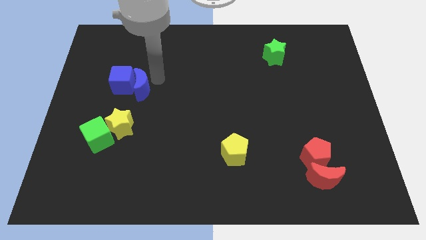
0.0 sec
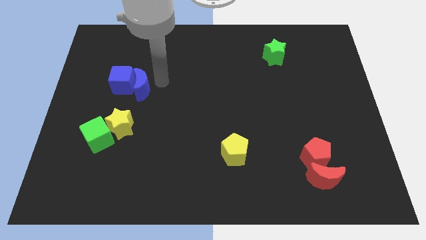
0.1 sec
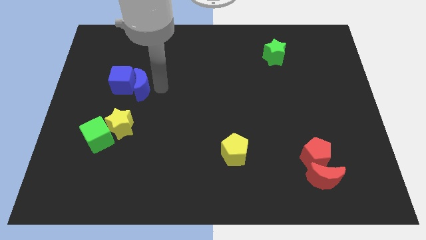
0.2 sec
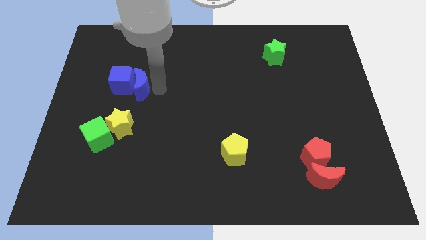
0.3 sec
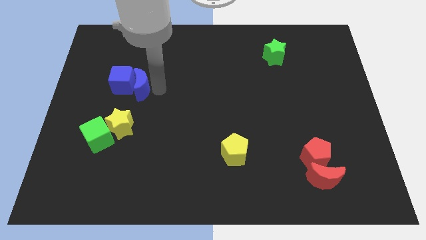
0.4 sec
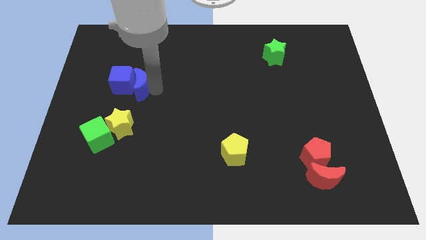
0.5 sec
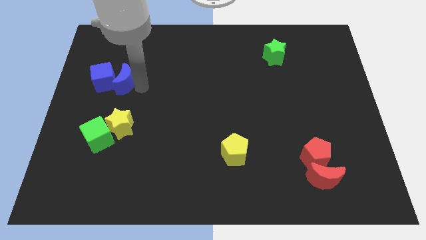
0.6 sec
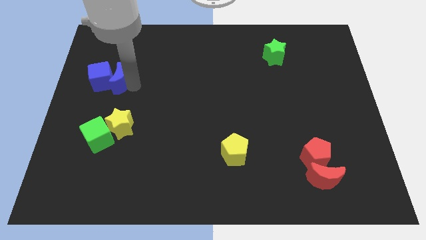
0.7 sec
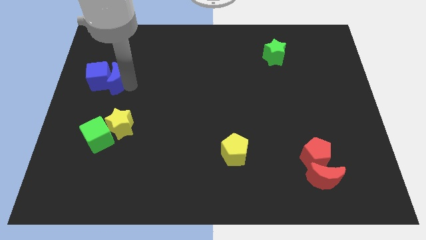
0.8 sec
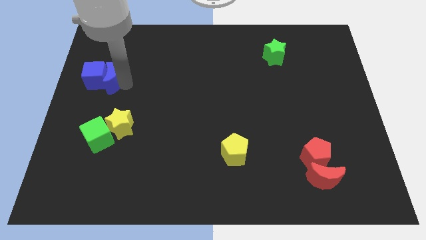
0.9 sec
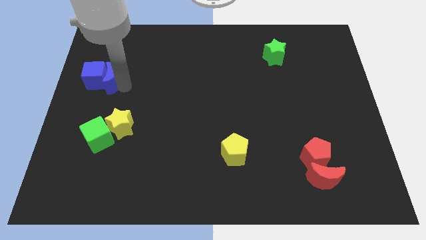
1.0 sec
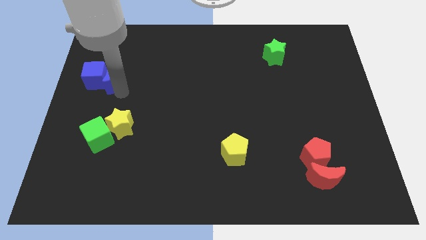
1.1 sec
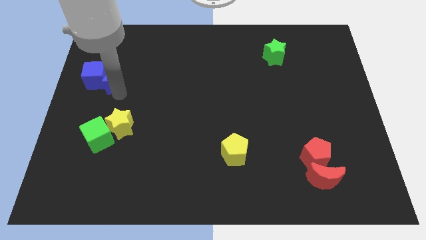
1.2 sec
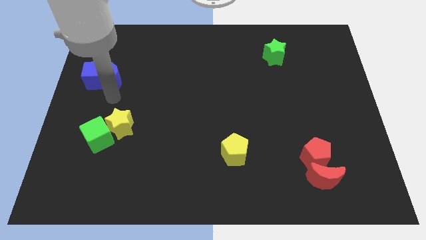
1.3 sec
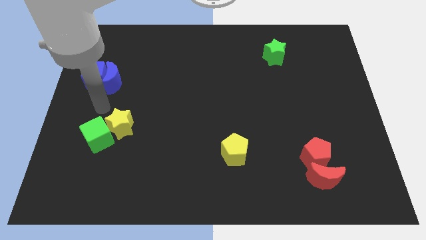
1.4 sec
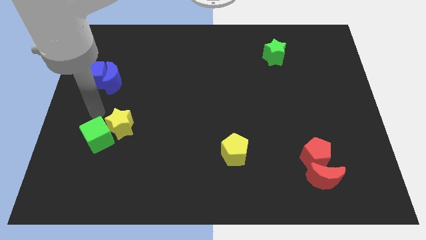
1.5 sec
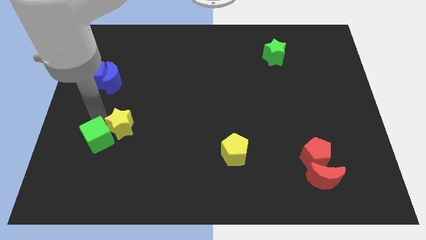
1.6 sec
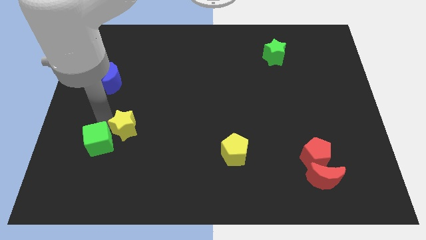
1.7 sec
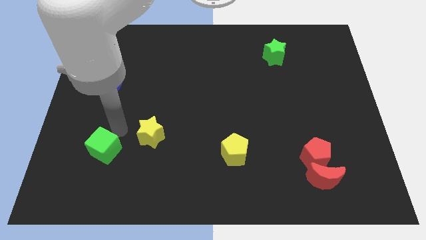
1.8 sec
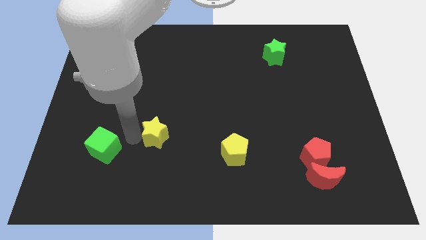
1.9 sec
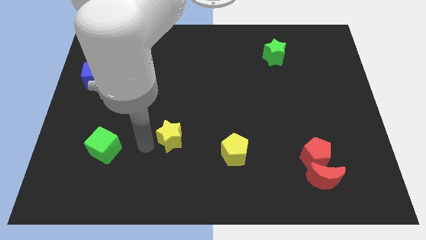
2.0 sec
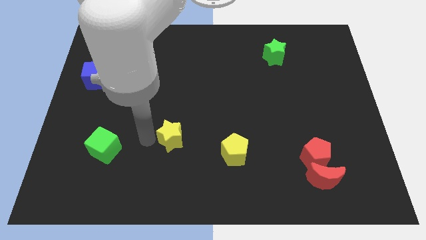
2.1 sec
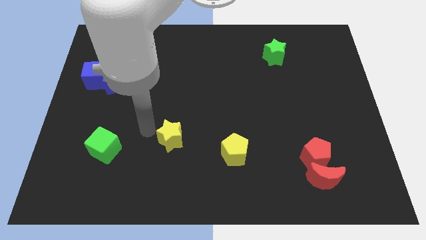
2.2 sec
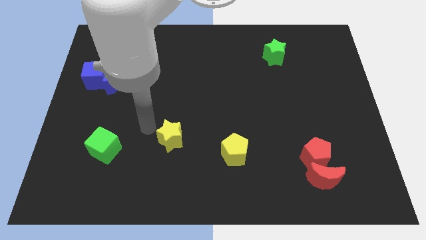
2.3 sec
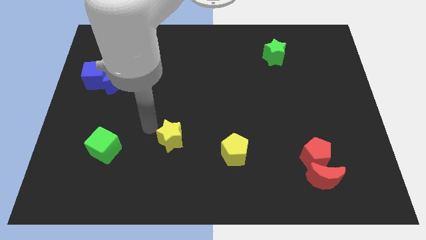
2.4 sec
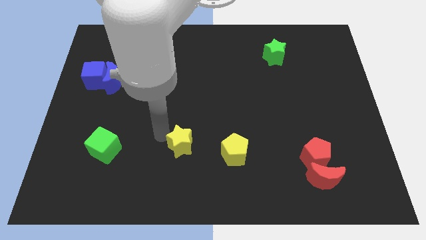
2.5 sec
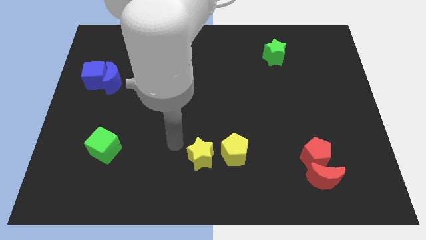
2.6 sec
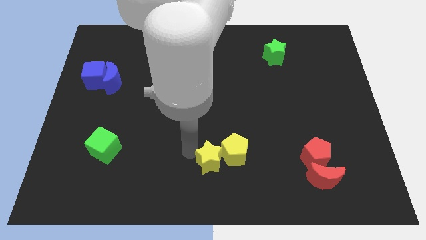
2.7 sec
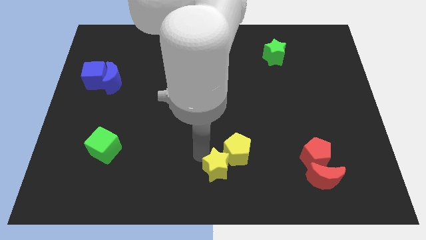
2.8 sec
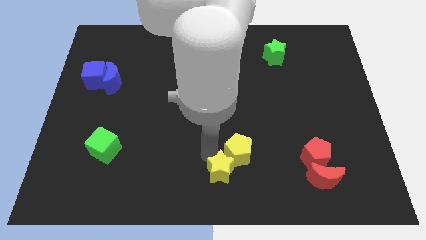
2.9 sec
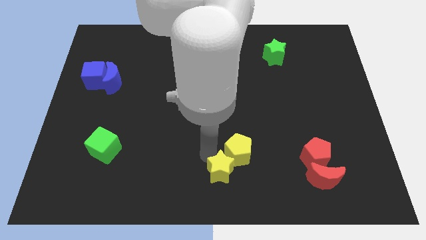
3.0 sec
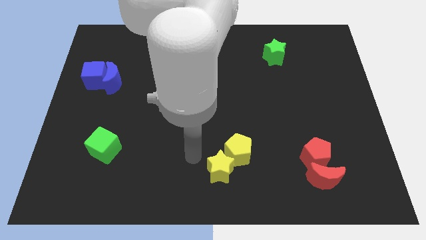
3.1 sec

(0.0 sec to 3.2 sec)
push the yellow star bottom left to the yellow pentagon

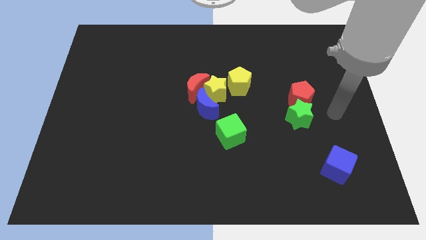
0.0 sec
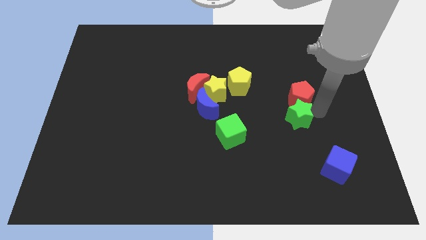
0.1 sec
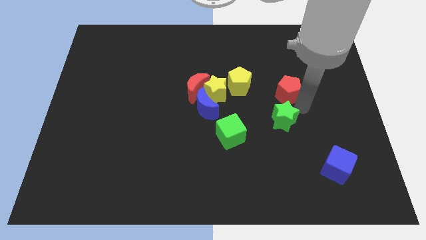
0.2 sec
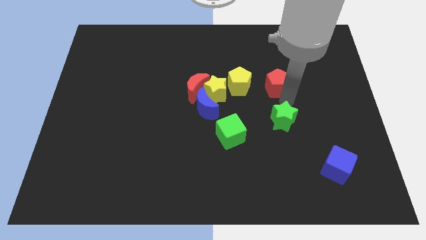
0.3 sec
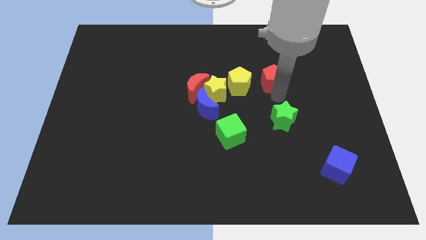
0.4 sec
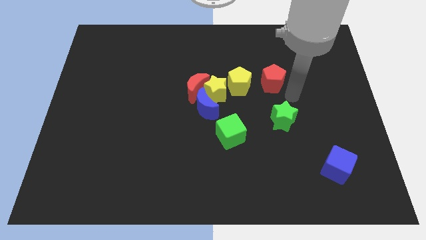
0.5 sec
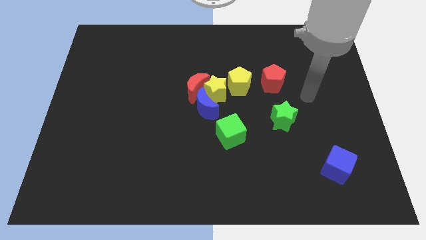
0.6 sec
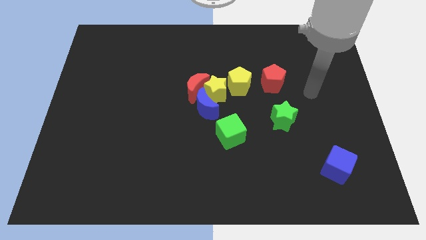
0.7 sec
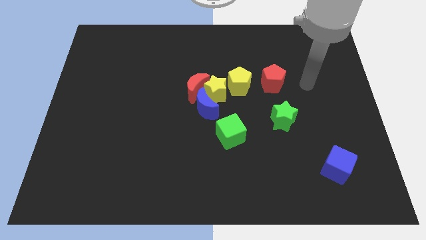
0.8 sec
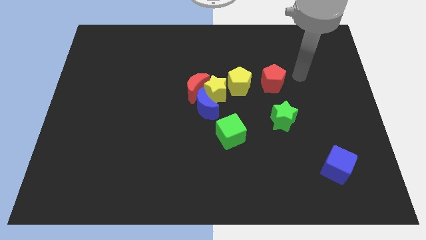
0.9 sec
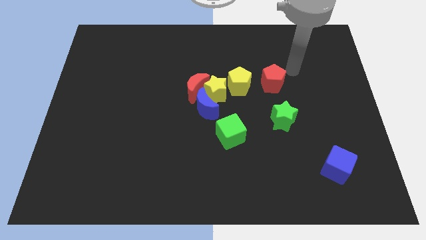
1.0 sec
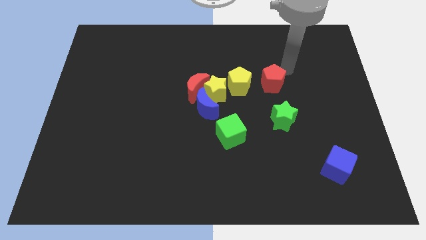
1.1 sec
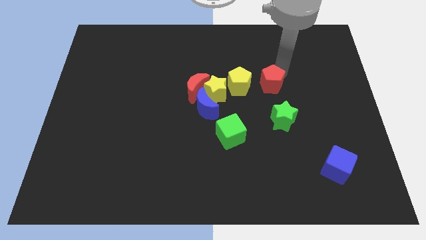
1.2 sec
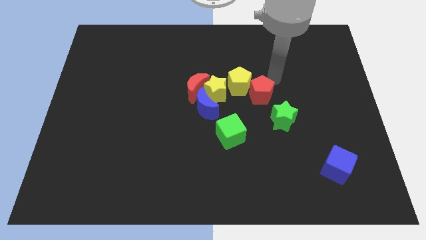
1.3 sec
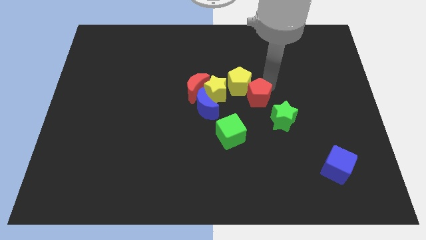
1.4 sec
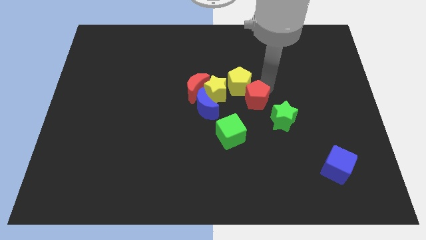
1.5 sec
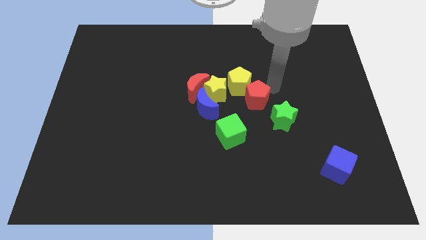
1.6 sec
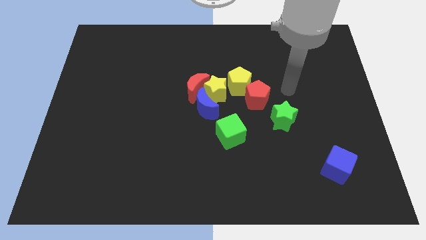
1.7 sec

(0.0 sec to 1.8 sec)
place the red pentagon at the bottom right of the yellow pentagon

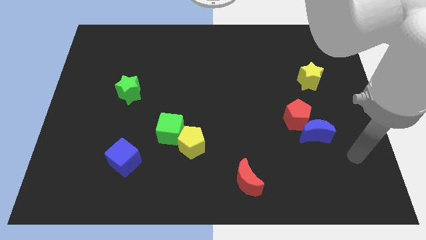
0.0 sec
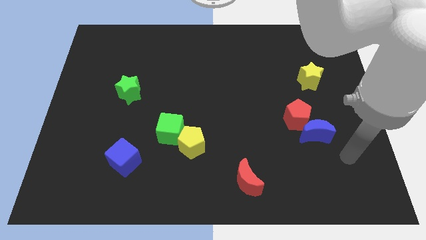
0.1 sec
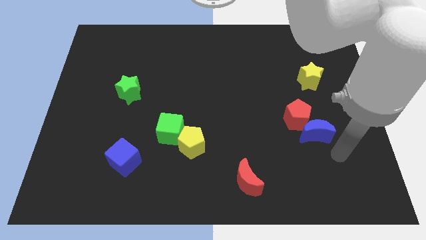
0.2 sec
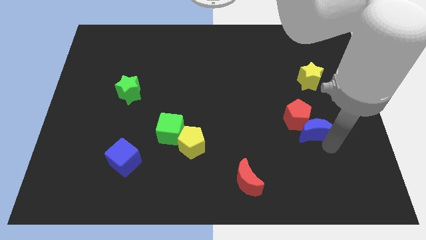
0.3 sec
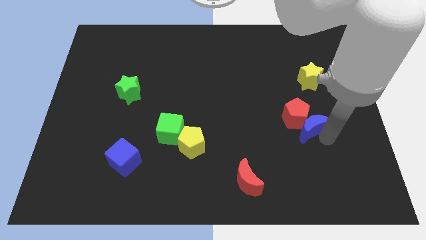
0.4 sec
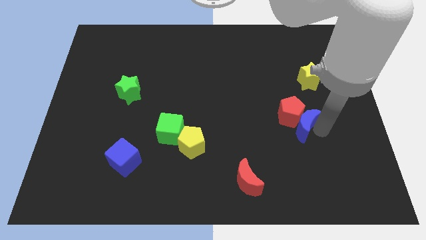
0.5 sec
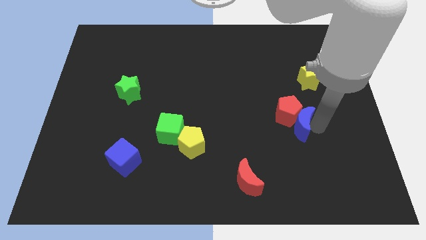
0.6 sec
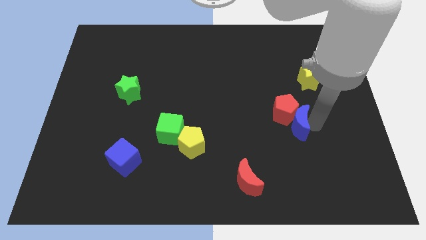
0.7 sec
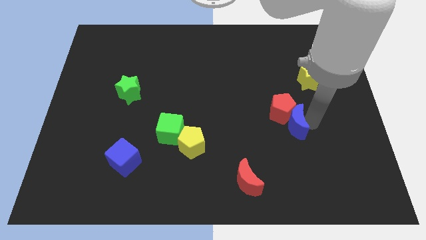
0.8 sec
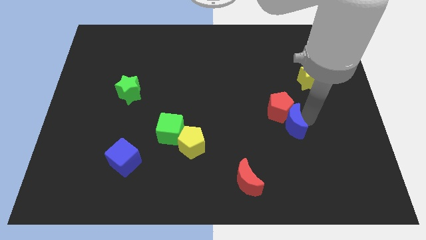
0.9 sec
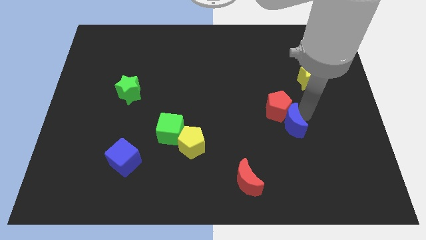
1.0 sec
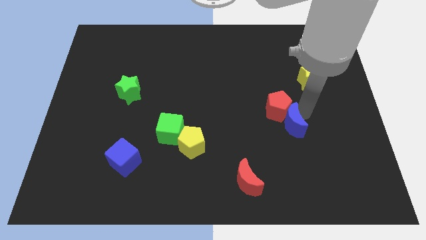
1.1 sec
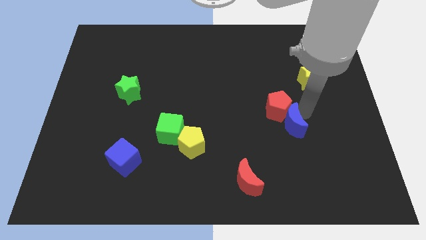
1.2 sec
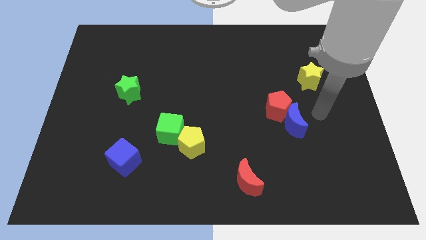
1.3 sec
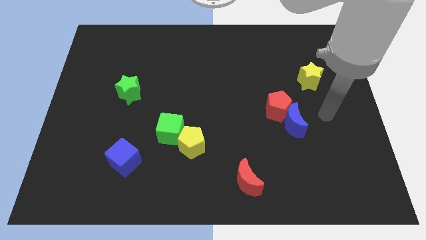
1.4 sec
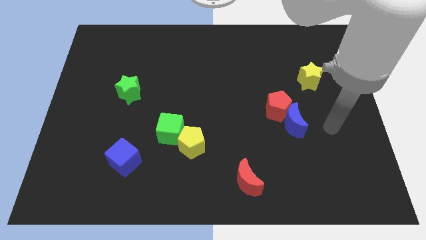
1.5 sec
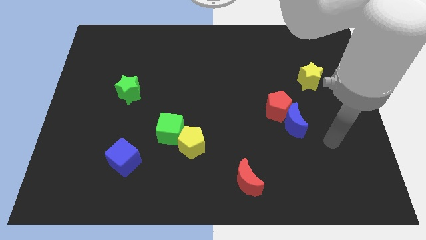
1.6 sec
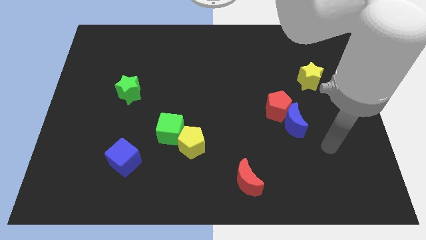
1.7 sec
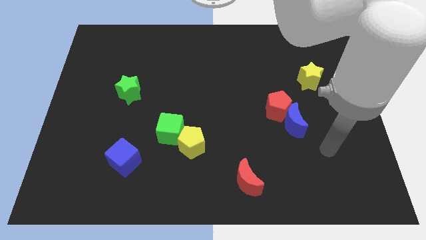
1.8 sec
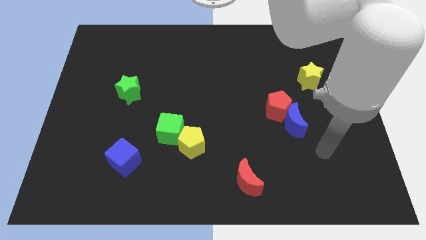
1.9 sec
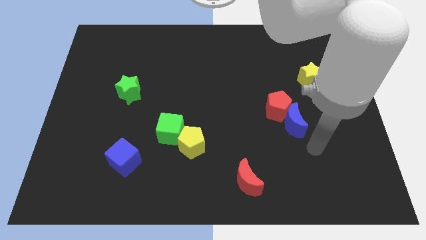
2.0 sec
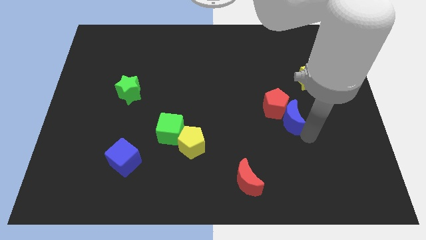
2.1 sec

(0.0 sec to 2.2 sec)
slightly drag the red pentagon and blue crescent towards top left

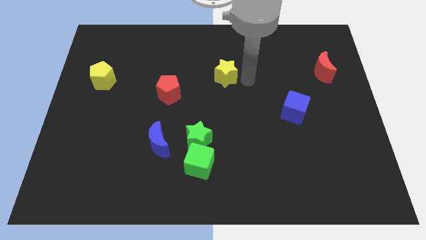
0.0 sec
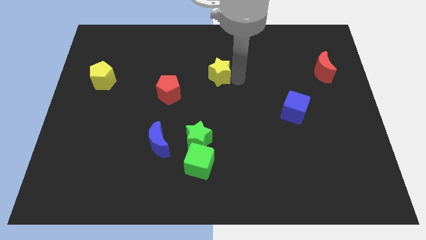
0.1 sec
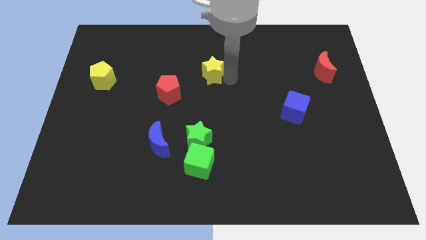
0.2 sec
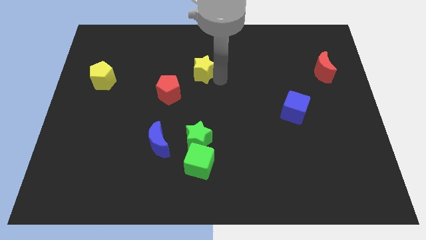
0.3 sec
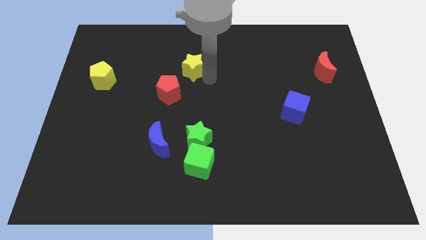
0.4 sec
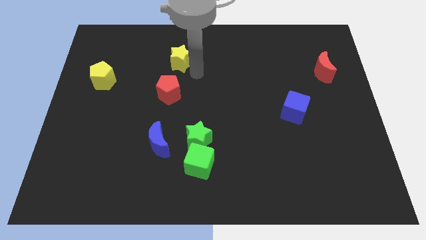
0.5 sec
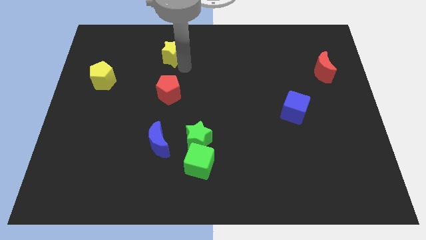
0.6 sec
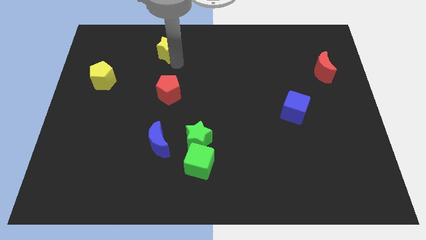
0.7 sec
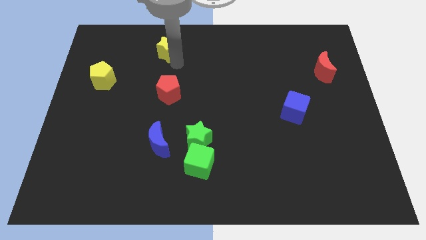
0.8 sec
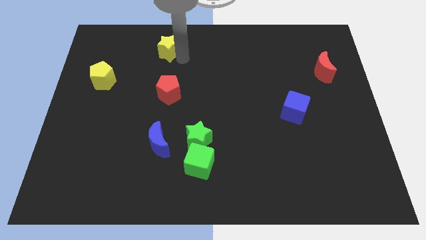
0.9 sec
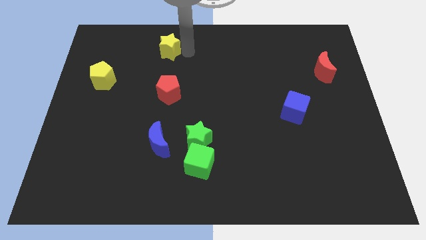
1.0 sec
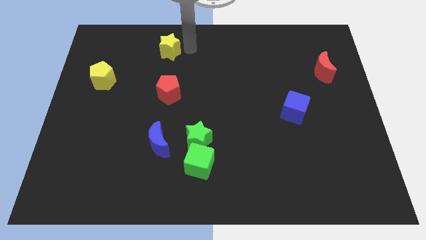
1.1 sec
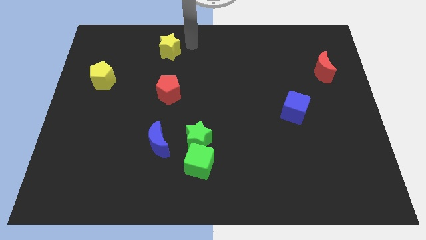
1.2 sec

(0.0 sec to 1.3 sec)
push the yellow star to the top side of the red crescent

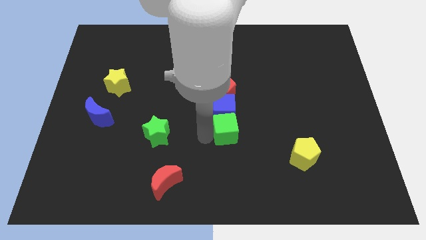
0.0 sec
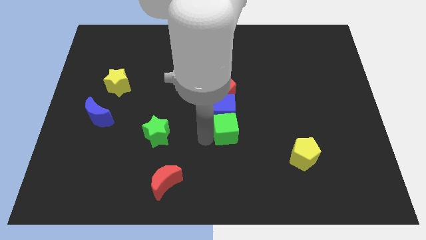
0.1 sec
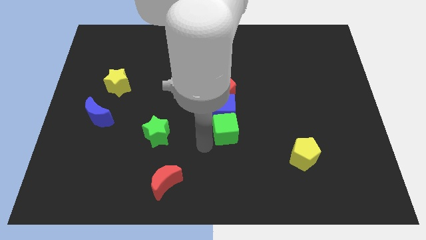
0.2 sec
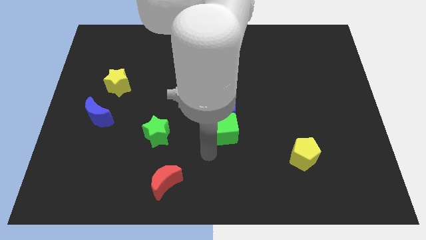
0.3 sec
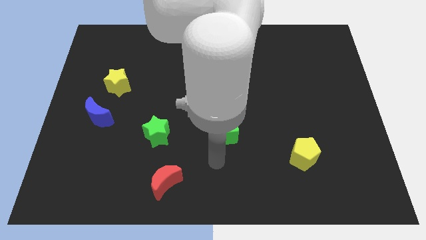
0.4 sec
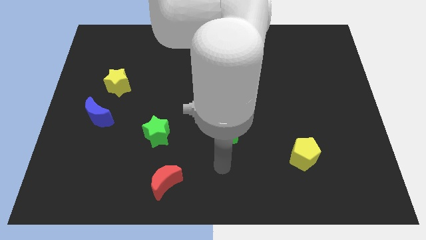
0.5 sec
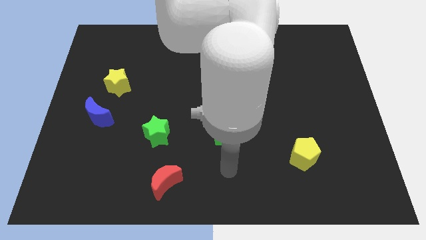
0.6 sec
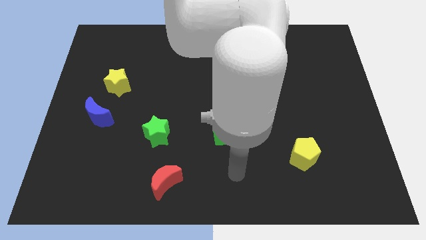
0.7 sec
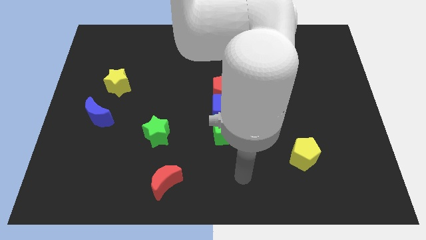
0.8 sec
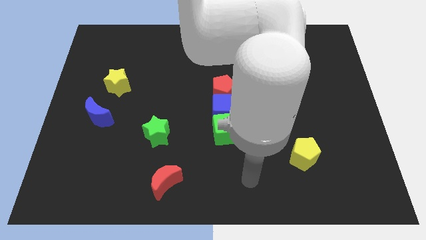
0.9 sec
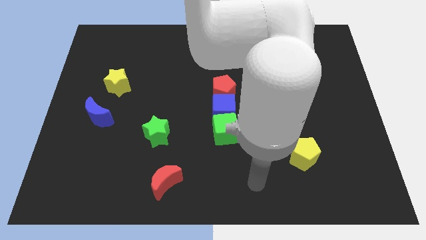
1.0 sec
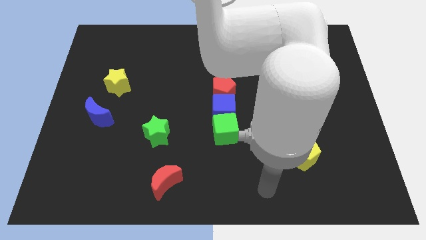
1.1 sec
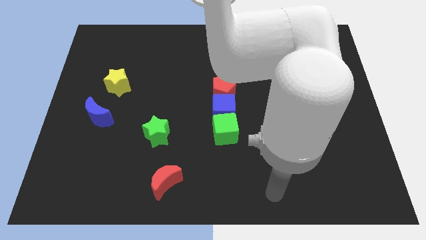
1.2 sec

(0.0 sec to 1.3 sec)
move your arm away from the left side of the green cube
